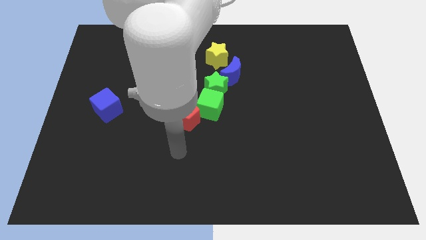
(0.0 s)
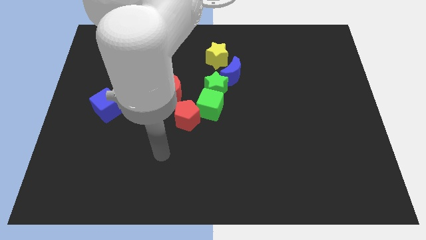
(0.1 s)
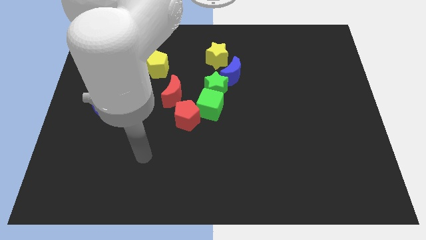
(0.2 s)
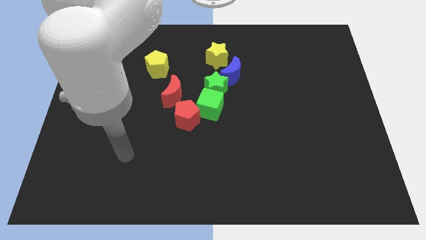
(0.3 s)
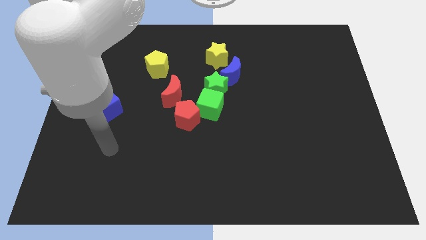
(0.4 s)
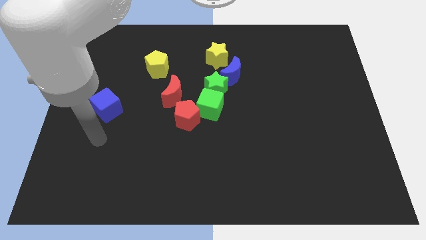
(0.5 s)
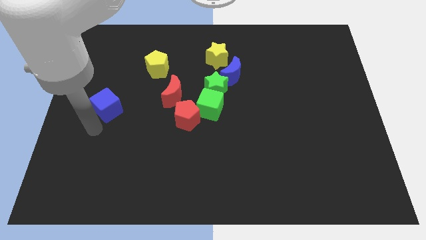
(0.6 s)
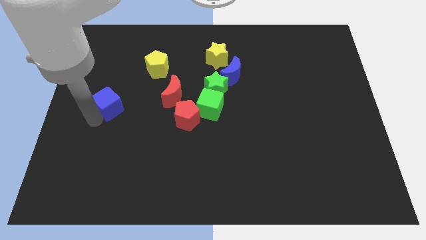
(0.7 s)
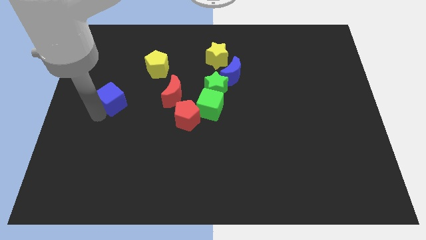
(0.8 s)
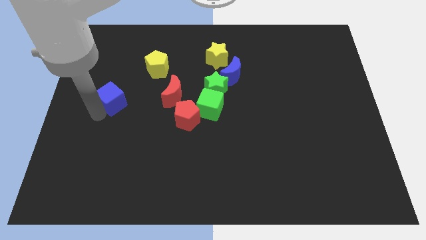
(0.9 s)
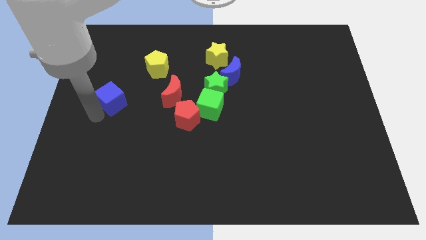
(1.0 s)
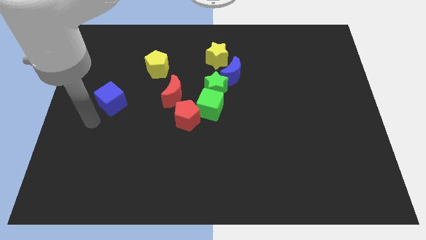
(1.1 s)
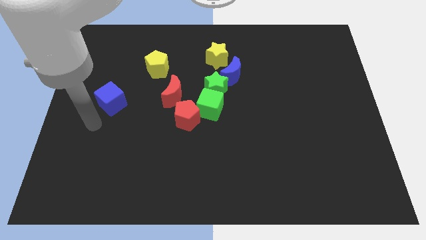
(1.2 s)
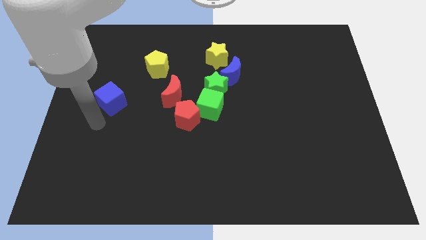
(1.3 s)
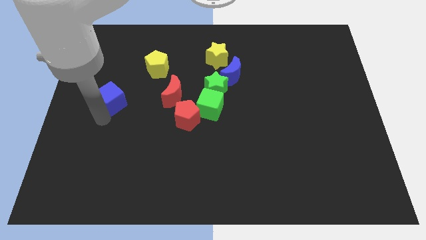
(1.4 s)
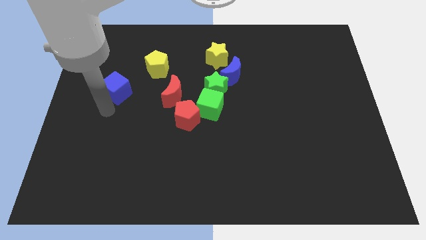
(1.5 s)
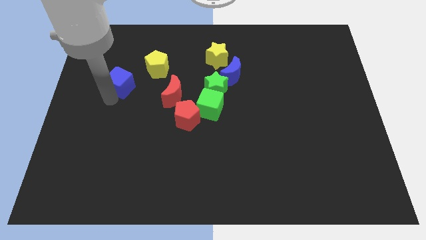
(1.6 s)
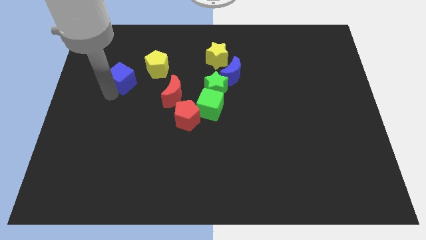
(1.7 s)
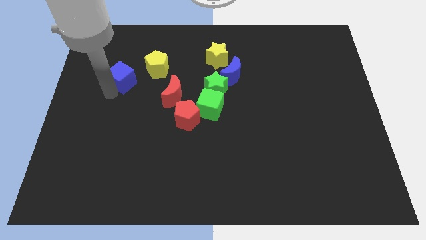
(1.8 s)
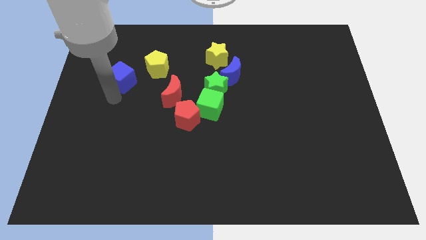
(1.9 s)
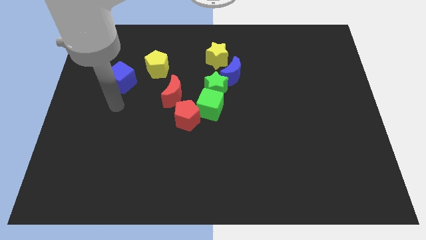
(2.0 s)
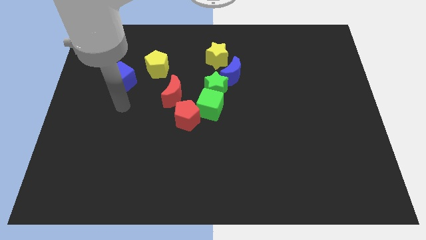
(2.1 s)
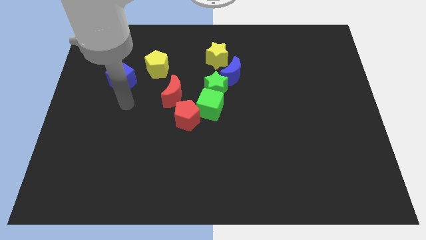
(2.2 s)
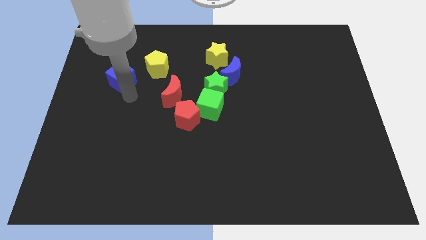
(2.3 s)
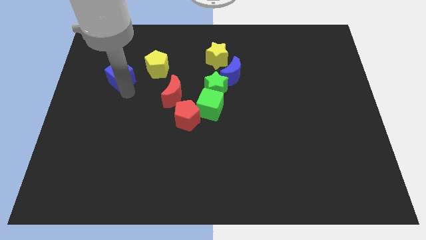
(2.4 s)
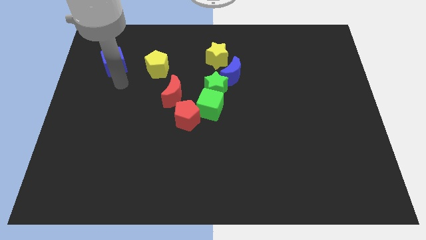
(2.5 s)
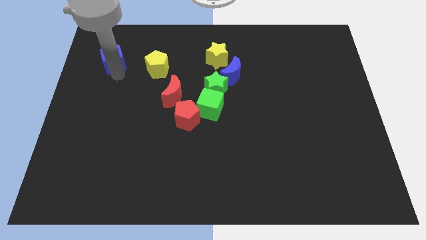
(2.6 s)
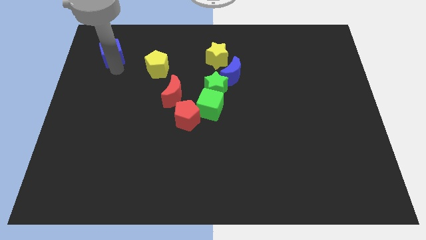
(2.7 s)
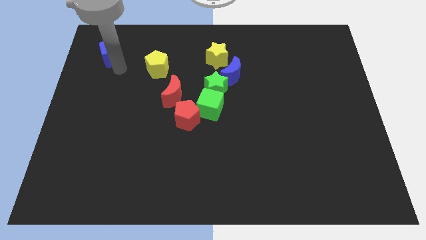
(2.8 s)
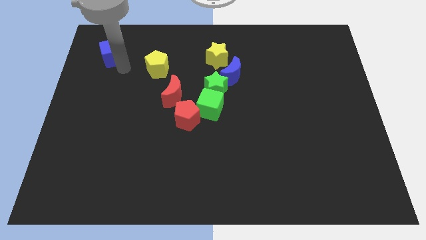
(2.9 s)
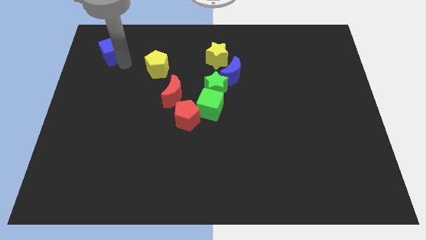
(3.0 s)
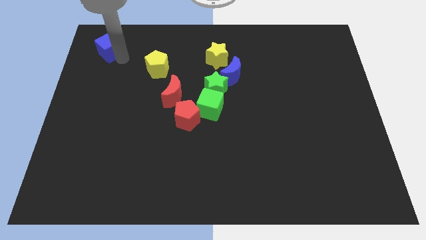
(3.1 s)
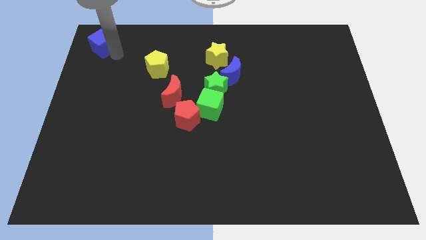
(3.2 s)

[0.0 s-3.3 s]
place the blue cube diagonally to the top left of the yellow pentagon

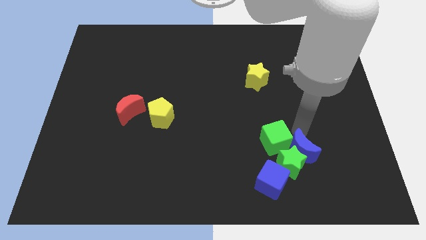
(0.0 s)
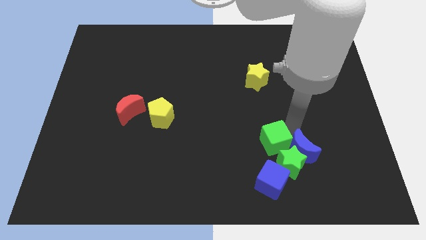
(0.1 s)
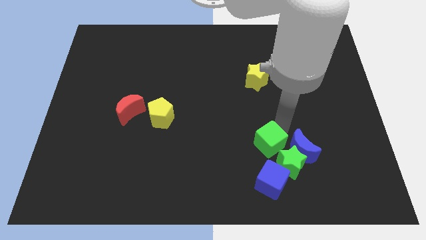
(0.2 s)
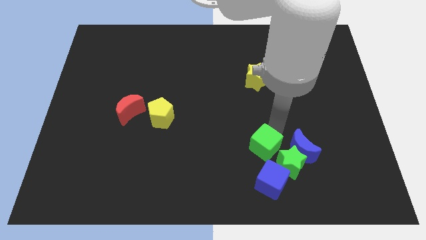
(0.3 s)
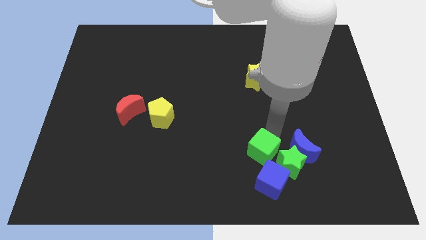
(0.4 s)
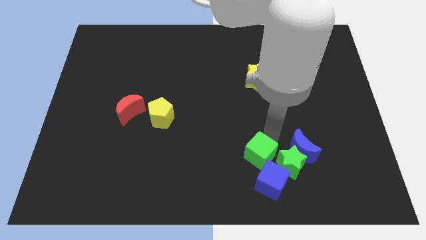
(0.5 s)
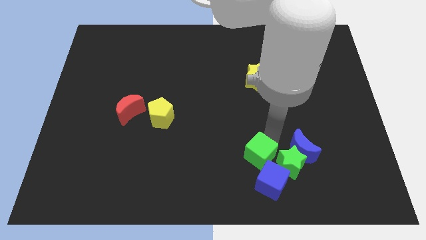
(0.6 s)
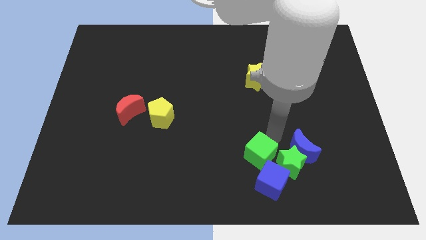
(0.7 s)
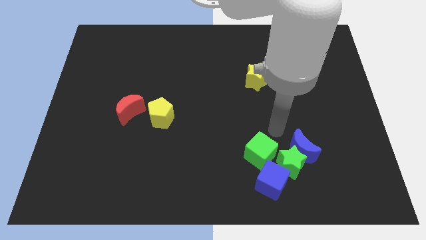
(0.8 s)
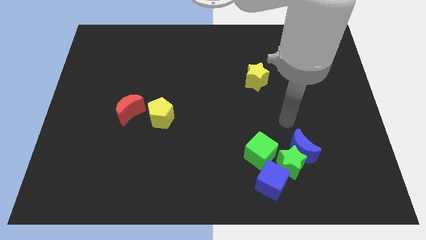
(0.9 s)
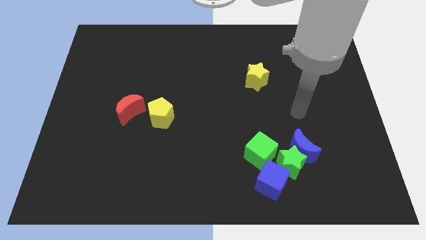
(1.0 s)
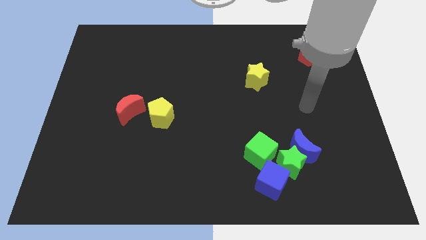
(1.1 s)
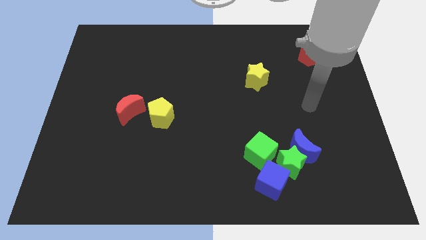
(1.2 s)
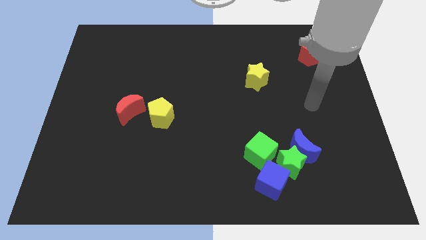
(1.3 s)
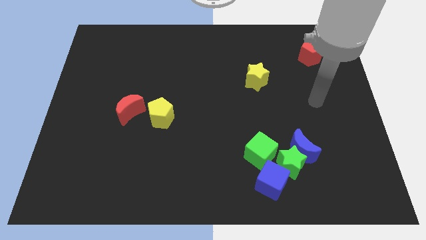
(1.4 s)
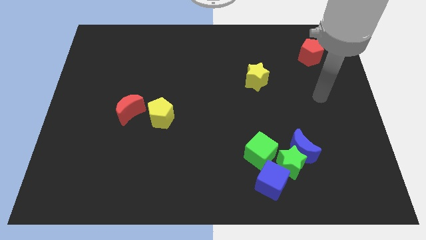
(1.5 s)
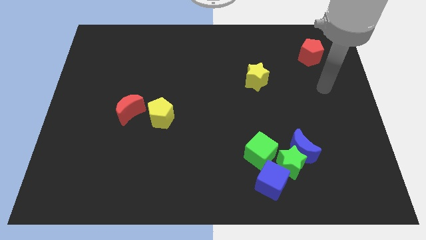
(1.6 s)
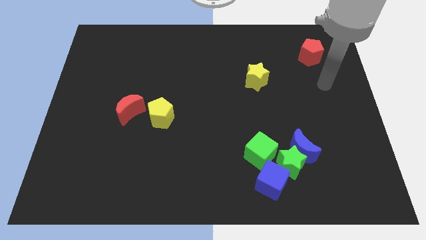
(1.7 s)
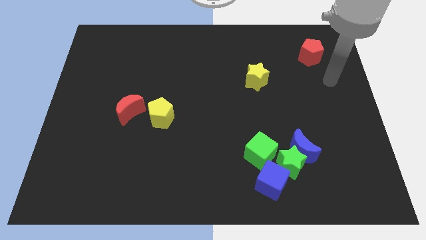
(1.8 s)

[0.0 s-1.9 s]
push the green cube towards the blue cube

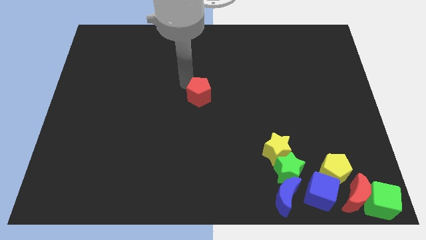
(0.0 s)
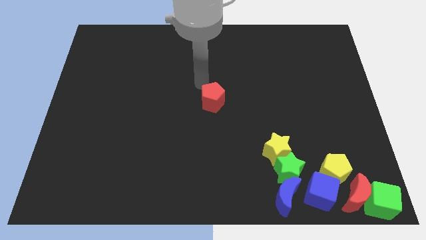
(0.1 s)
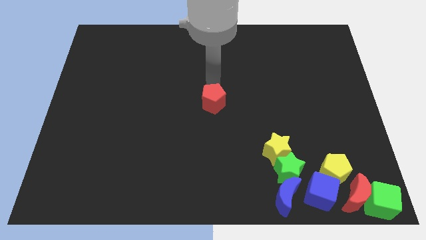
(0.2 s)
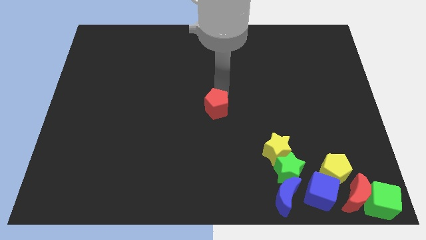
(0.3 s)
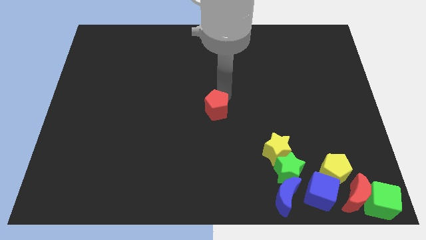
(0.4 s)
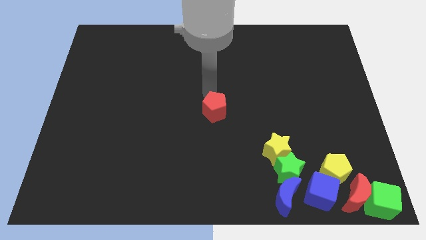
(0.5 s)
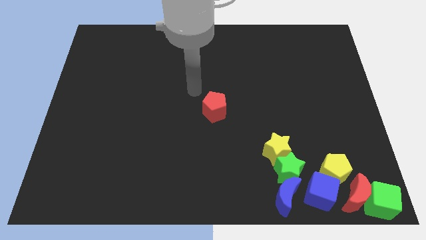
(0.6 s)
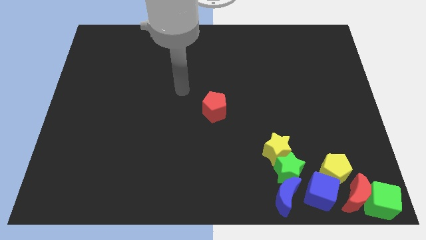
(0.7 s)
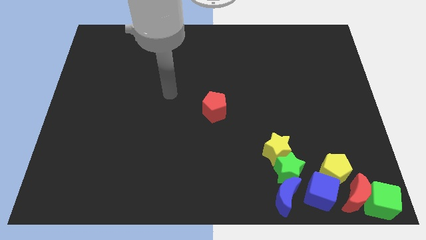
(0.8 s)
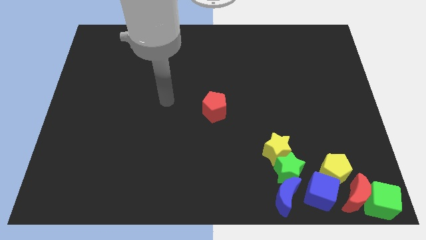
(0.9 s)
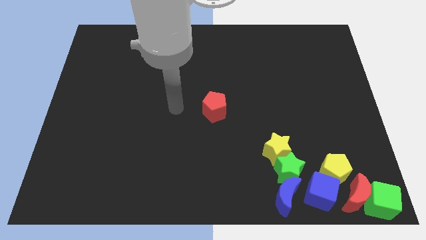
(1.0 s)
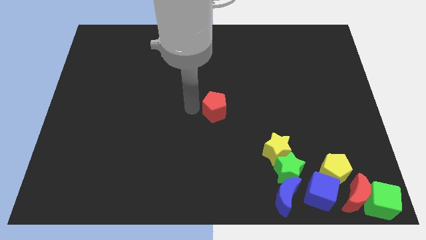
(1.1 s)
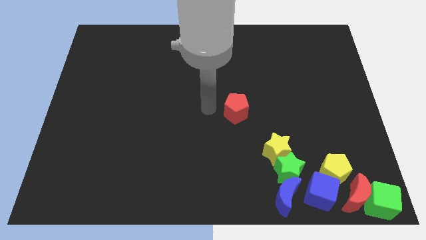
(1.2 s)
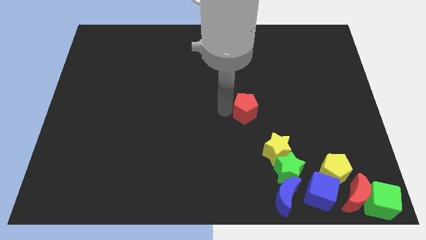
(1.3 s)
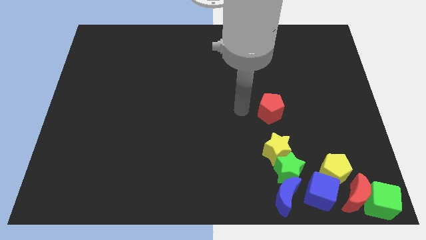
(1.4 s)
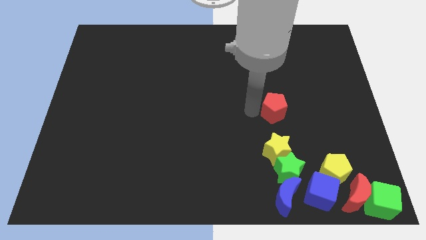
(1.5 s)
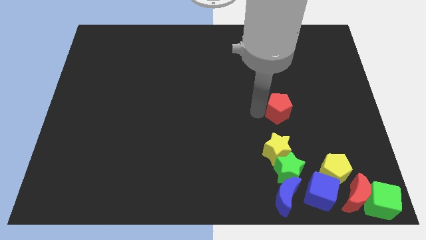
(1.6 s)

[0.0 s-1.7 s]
put the red pentagon above the yellow star

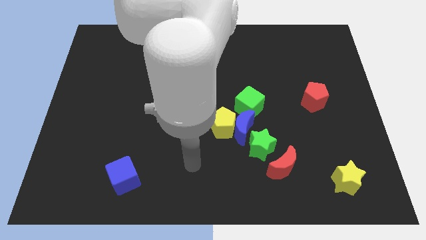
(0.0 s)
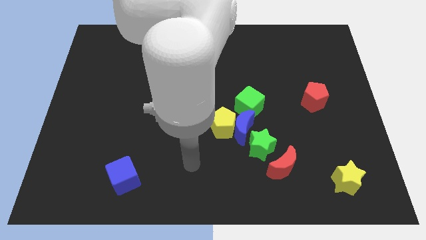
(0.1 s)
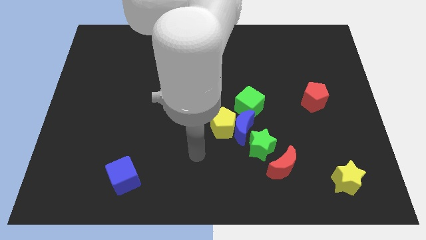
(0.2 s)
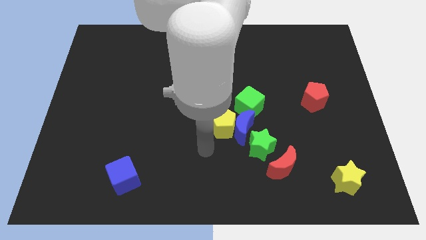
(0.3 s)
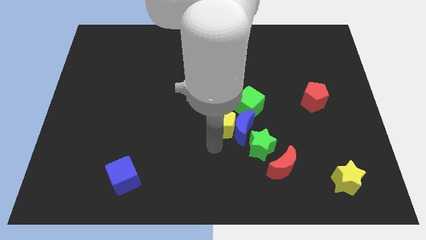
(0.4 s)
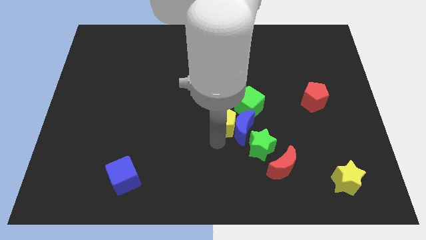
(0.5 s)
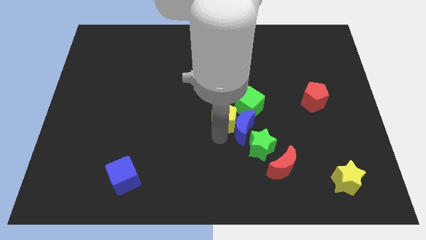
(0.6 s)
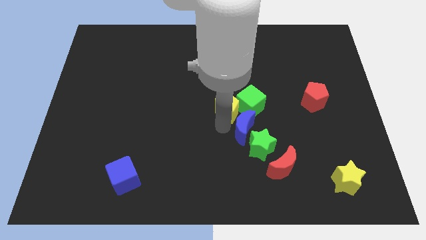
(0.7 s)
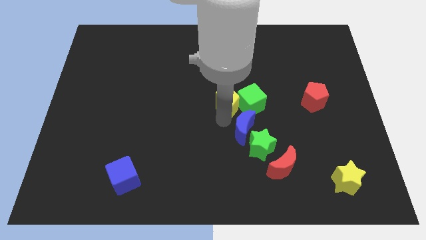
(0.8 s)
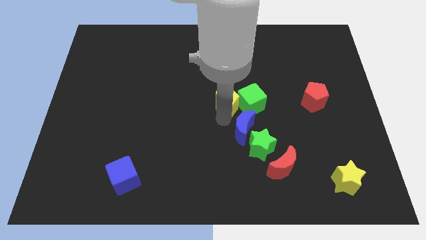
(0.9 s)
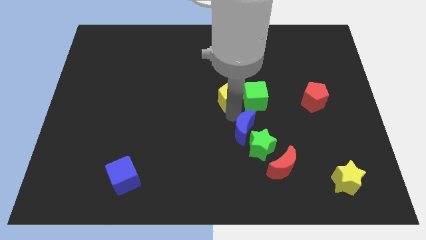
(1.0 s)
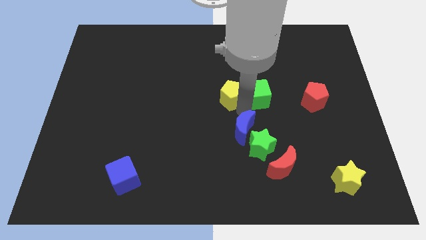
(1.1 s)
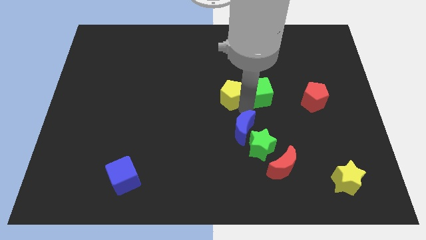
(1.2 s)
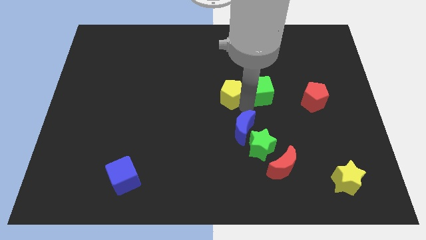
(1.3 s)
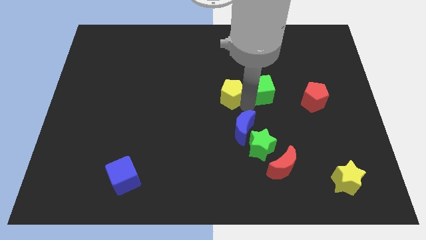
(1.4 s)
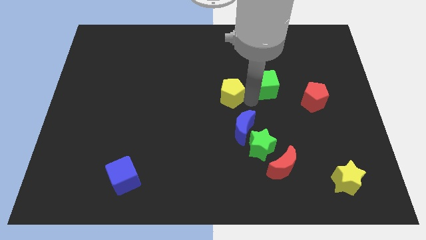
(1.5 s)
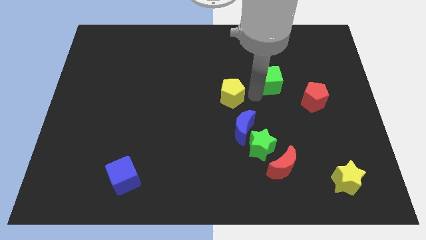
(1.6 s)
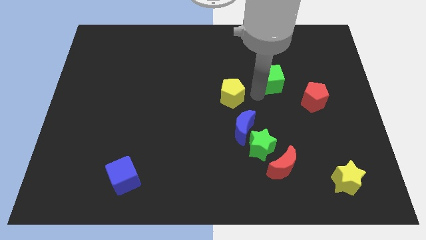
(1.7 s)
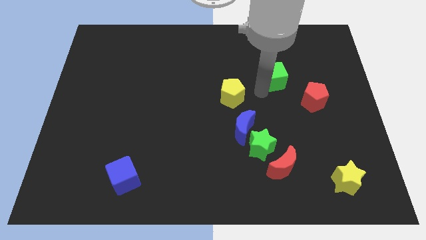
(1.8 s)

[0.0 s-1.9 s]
separate the yellow pentagon and green cube

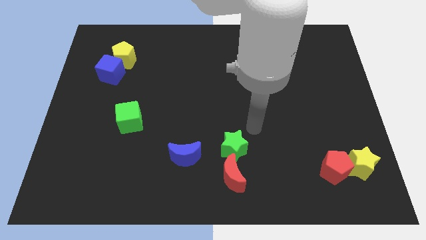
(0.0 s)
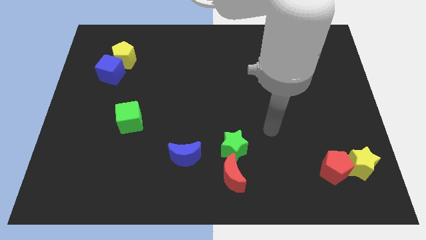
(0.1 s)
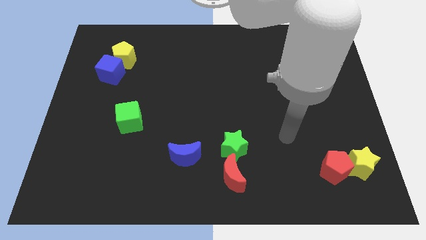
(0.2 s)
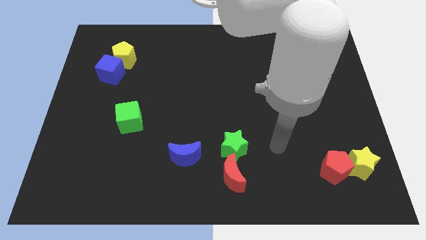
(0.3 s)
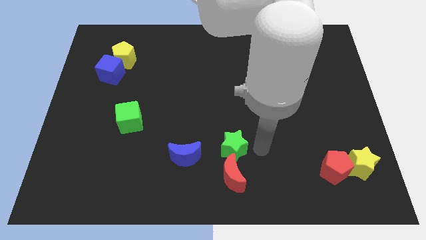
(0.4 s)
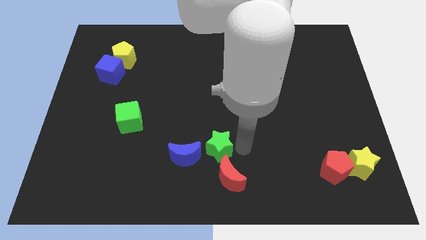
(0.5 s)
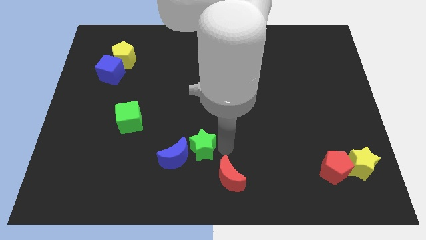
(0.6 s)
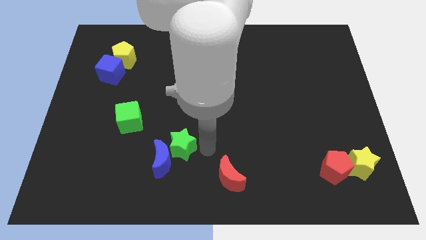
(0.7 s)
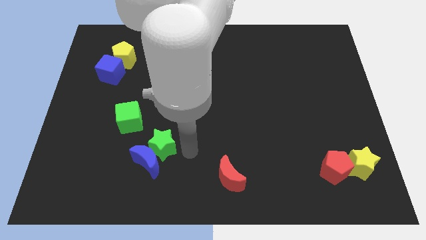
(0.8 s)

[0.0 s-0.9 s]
move green star into the blue moon
